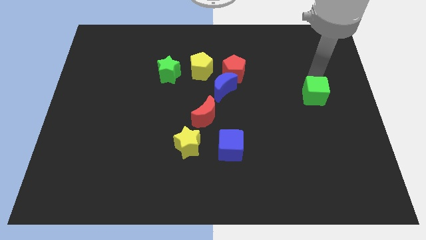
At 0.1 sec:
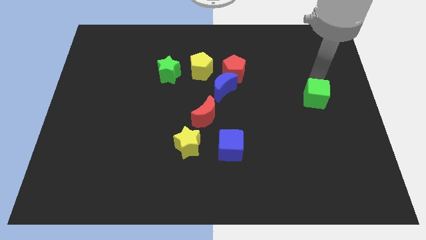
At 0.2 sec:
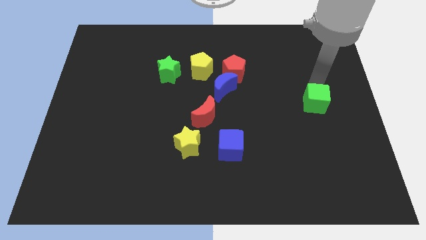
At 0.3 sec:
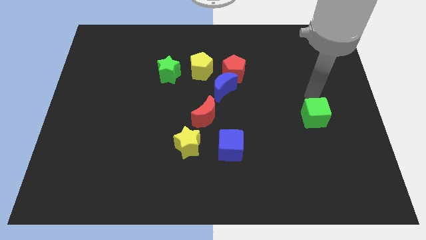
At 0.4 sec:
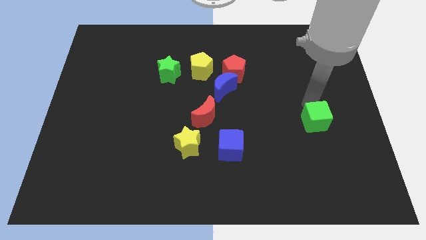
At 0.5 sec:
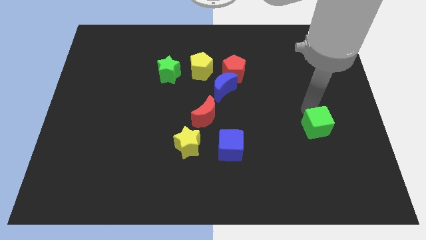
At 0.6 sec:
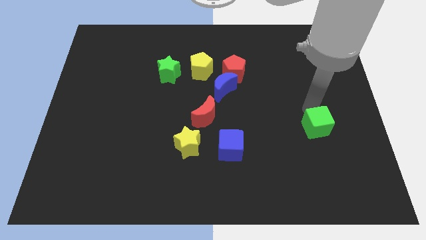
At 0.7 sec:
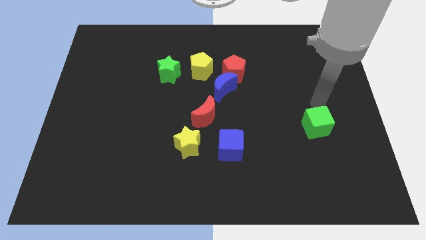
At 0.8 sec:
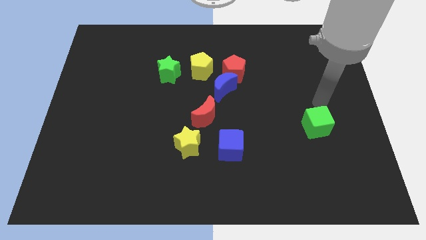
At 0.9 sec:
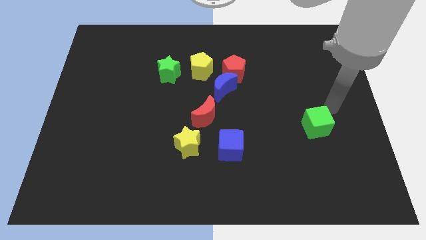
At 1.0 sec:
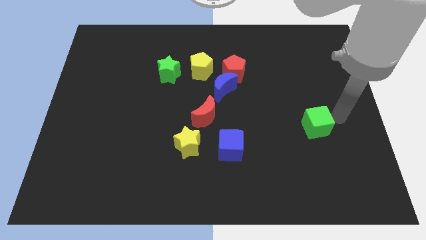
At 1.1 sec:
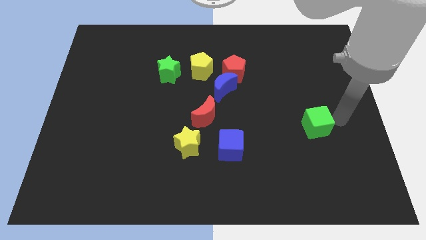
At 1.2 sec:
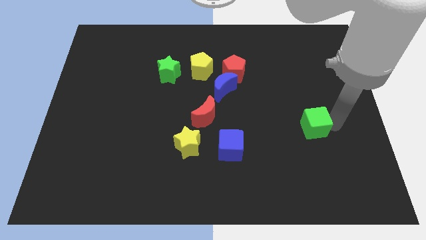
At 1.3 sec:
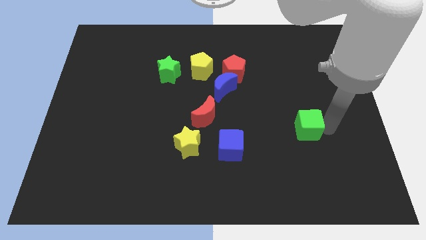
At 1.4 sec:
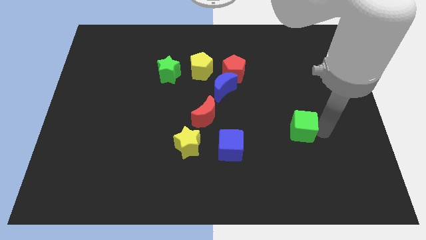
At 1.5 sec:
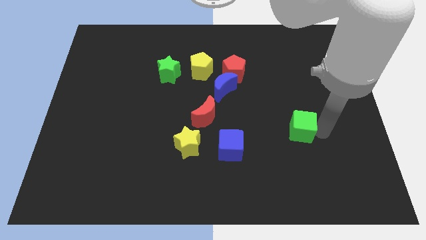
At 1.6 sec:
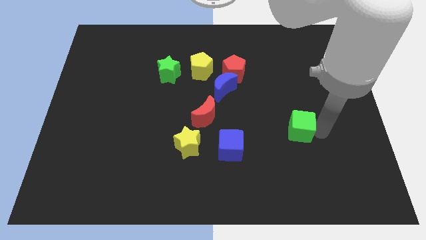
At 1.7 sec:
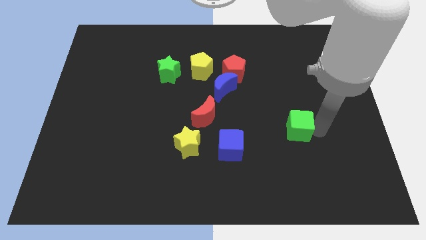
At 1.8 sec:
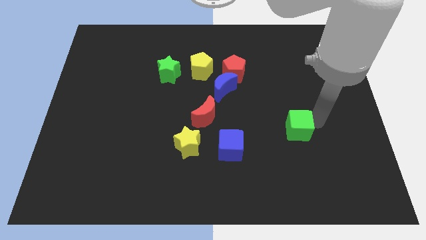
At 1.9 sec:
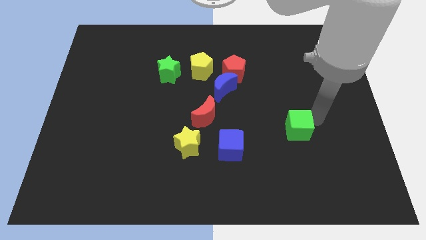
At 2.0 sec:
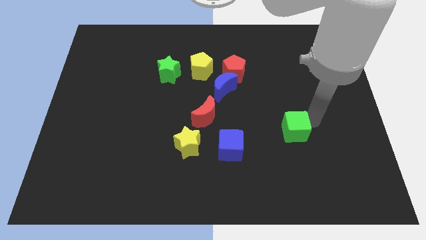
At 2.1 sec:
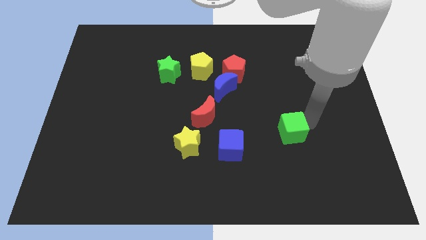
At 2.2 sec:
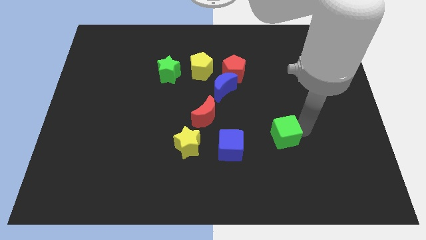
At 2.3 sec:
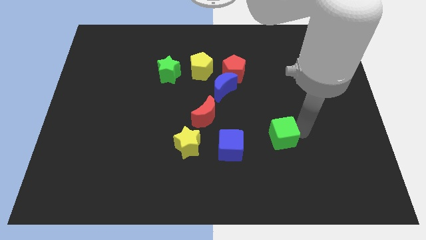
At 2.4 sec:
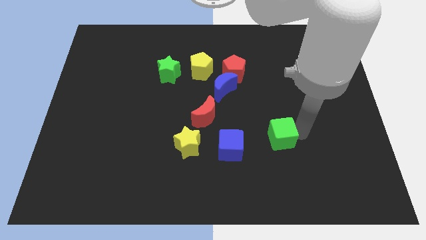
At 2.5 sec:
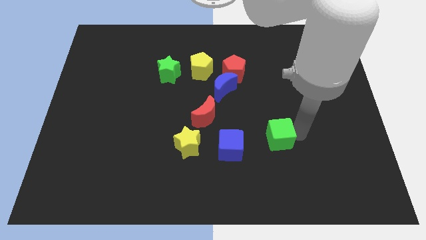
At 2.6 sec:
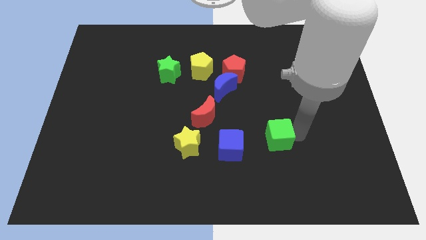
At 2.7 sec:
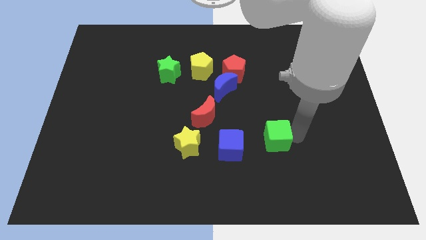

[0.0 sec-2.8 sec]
move the green cube towards the blue cube

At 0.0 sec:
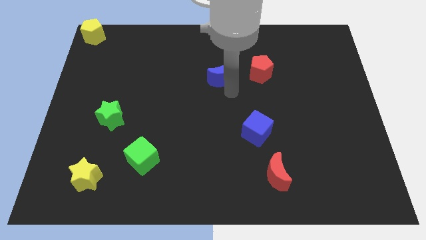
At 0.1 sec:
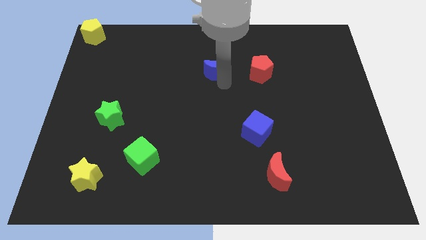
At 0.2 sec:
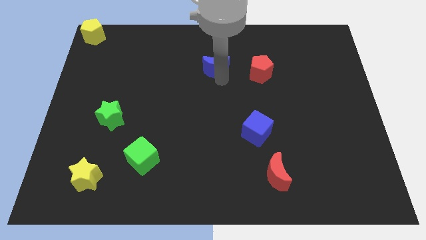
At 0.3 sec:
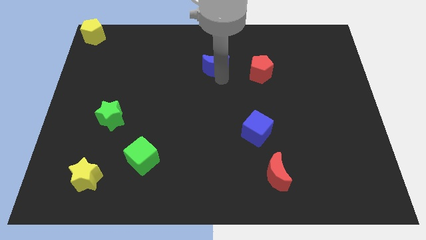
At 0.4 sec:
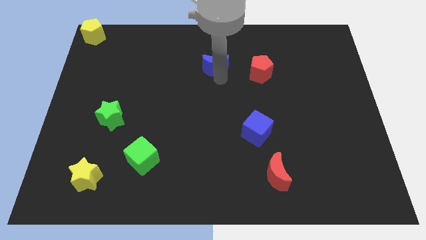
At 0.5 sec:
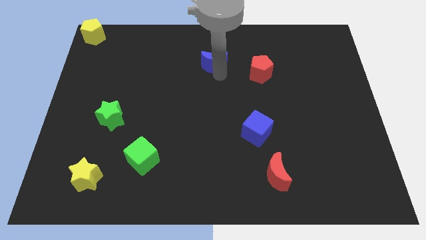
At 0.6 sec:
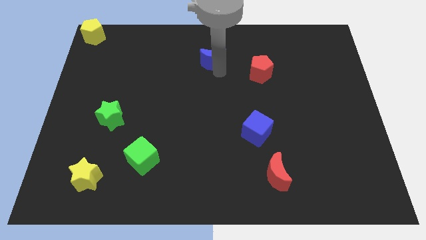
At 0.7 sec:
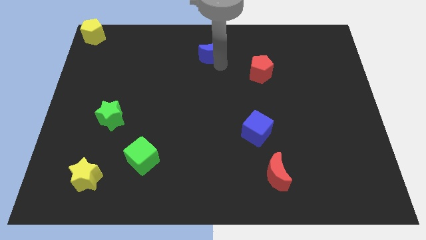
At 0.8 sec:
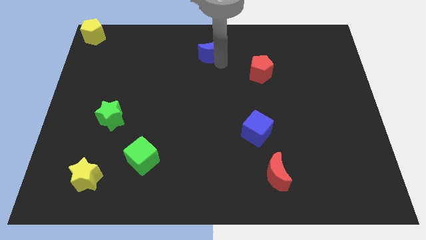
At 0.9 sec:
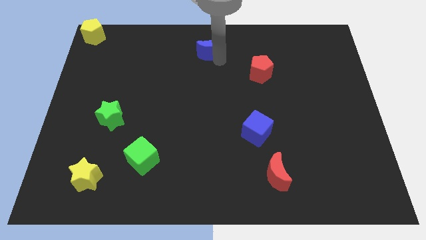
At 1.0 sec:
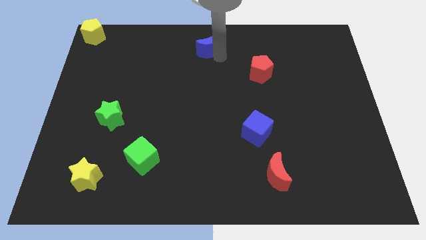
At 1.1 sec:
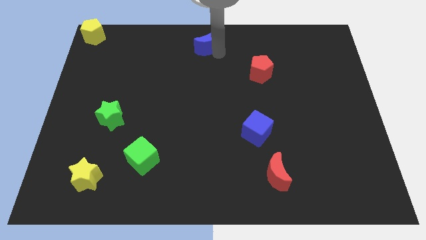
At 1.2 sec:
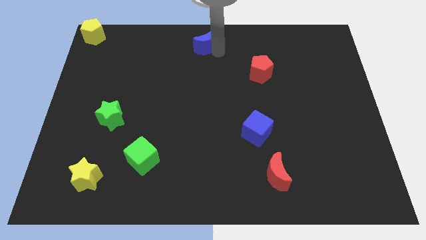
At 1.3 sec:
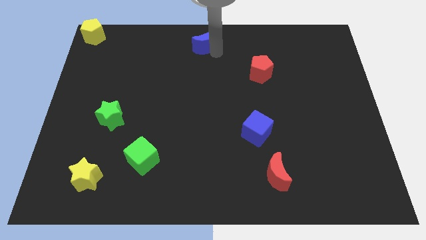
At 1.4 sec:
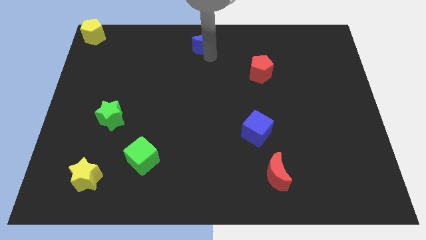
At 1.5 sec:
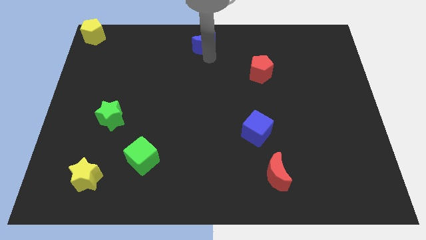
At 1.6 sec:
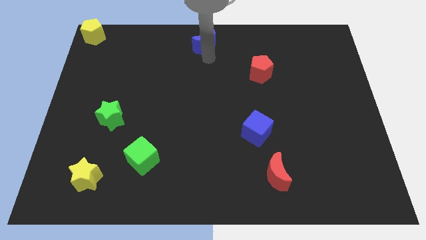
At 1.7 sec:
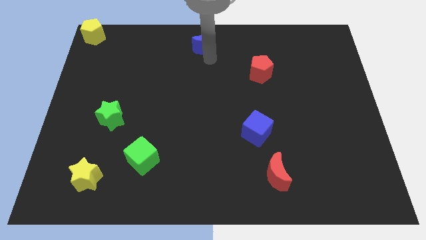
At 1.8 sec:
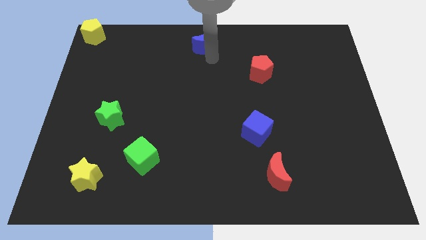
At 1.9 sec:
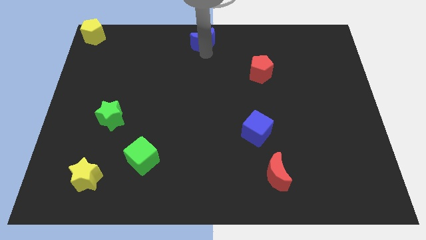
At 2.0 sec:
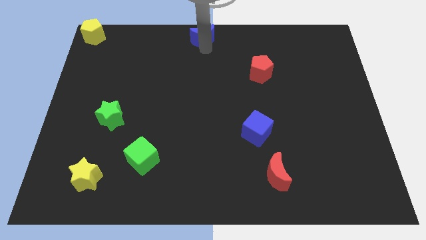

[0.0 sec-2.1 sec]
place blue moon to the top center

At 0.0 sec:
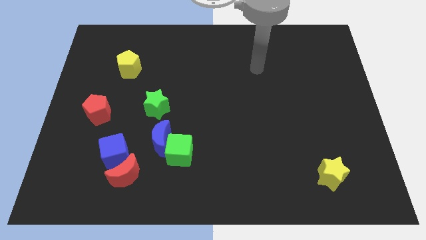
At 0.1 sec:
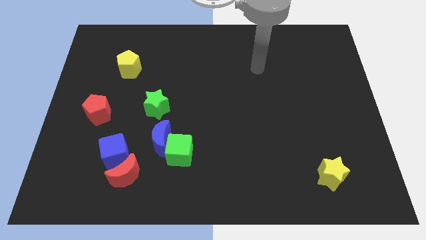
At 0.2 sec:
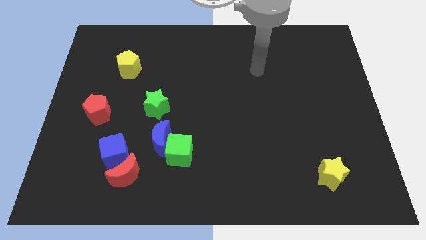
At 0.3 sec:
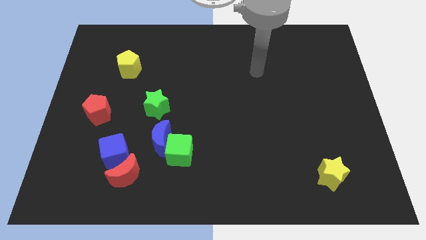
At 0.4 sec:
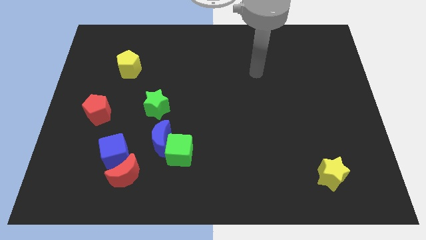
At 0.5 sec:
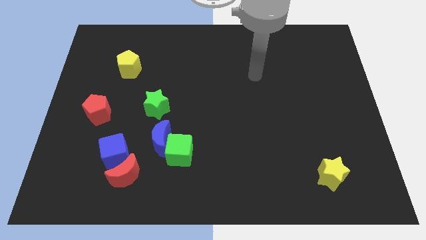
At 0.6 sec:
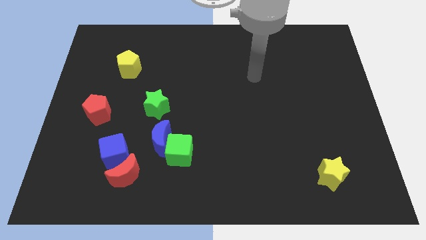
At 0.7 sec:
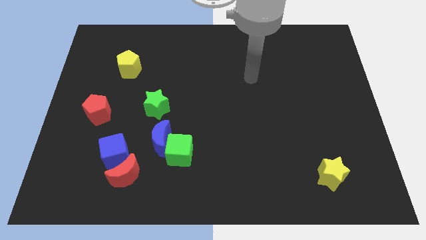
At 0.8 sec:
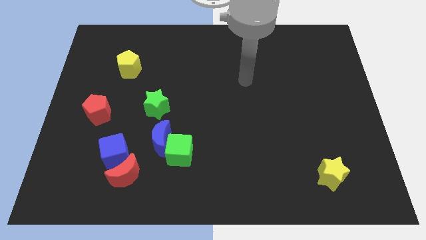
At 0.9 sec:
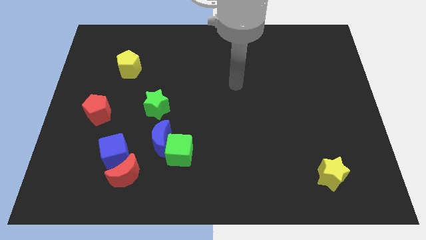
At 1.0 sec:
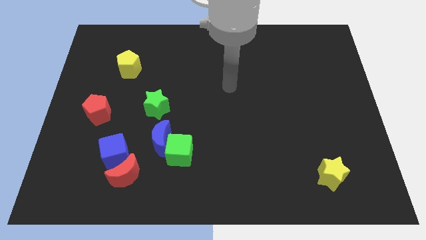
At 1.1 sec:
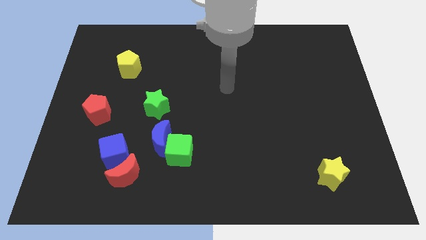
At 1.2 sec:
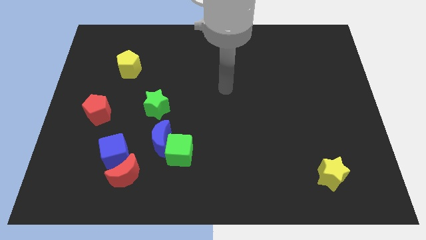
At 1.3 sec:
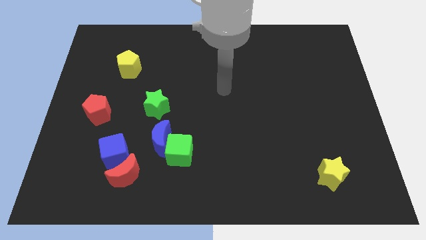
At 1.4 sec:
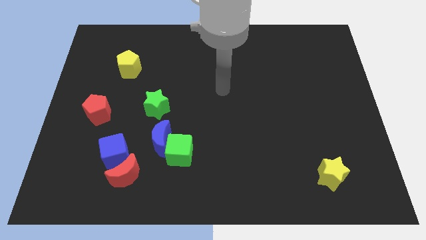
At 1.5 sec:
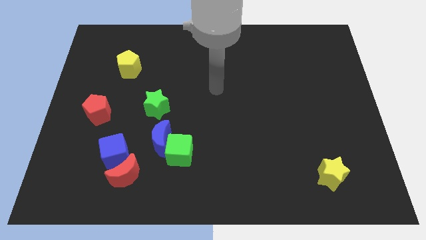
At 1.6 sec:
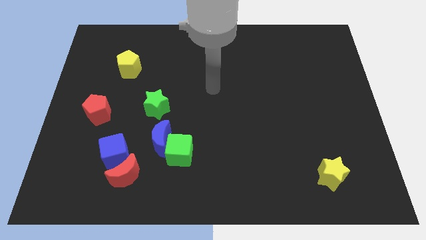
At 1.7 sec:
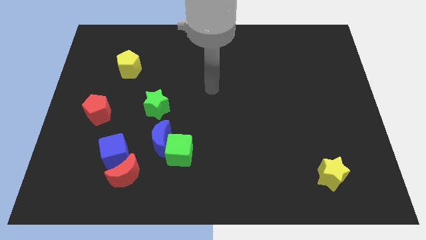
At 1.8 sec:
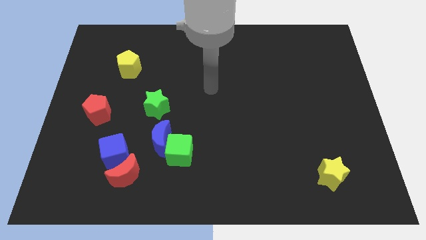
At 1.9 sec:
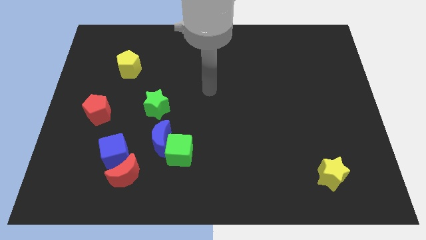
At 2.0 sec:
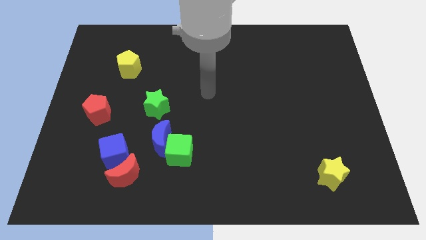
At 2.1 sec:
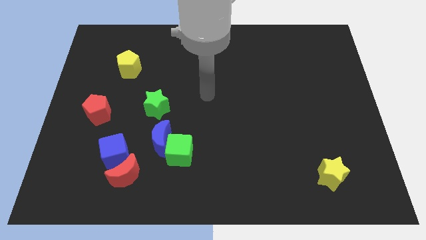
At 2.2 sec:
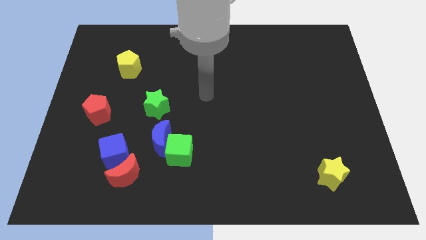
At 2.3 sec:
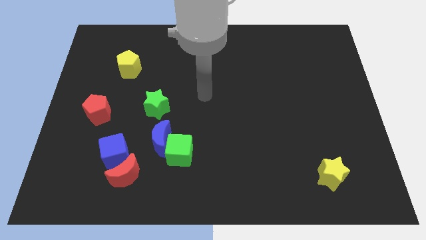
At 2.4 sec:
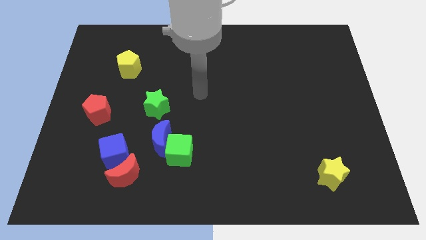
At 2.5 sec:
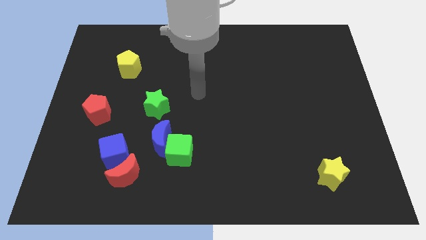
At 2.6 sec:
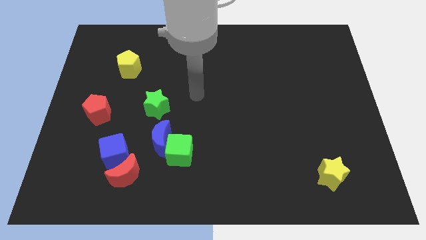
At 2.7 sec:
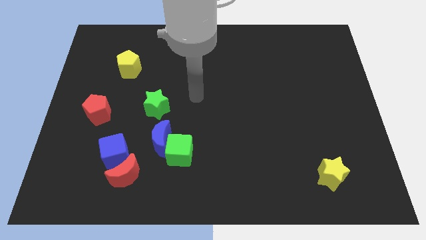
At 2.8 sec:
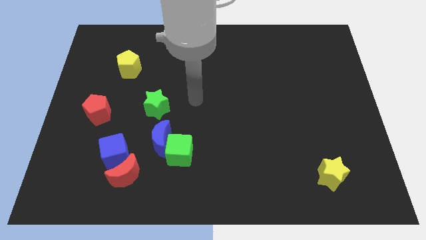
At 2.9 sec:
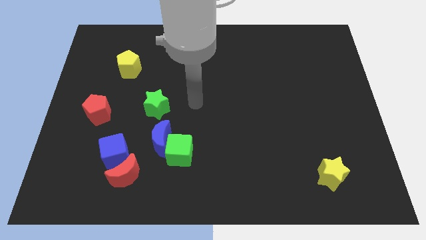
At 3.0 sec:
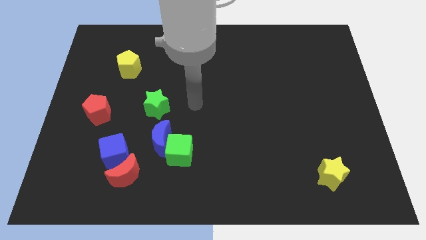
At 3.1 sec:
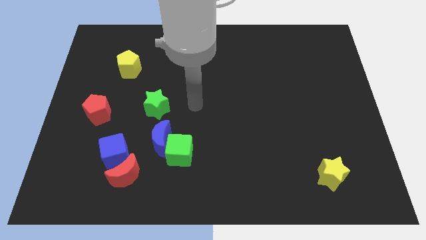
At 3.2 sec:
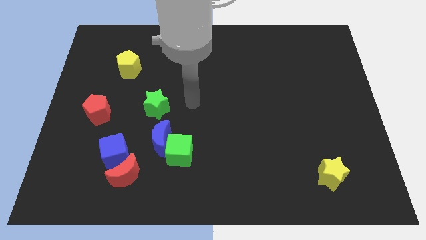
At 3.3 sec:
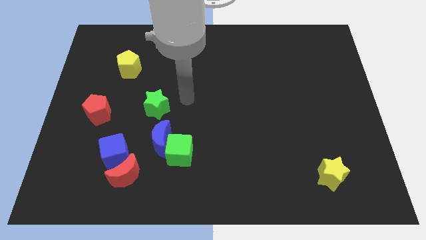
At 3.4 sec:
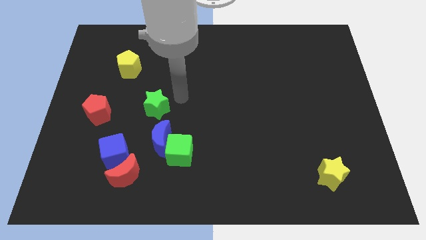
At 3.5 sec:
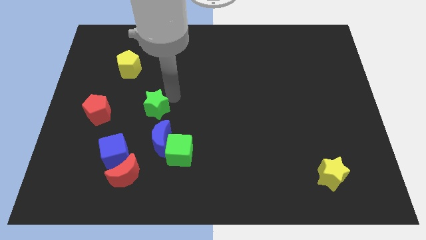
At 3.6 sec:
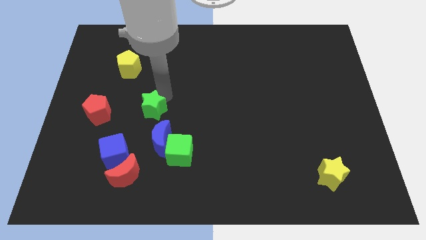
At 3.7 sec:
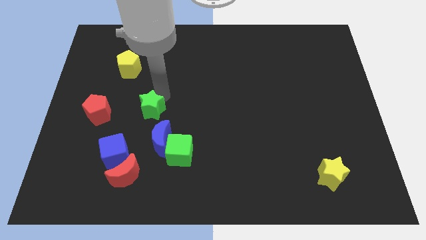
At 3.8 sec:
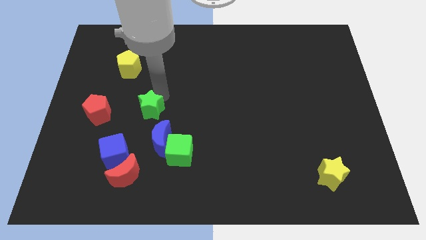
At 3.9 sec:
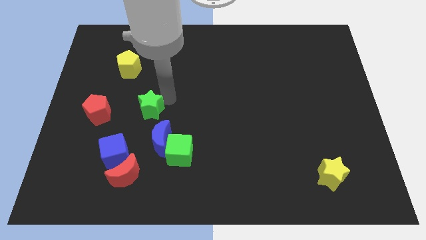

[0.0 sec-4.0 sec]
place the arm near the green star
